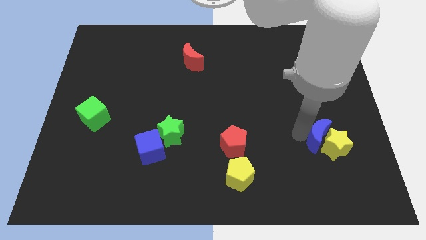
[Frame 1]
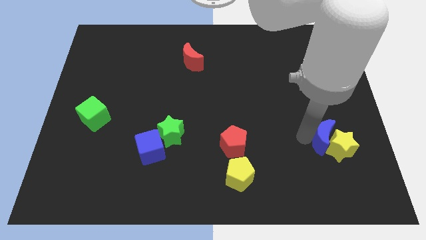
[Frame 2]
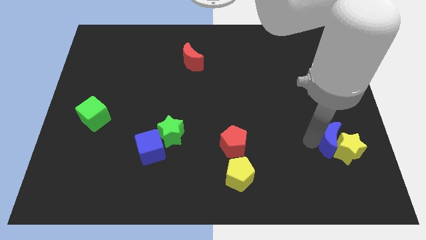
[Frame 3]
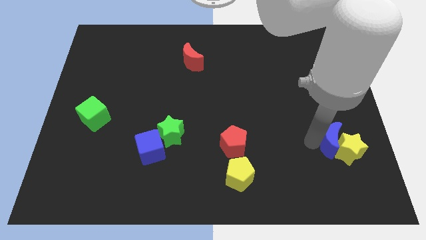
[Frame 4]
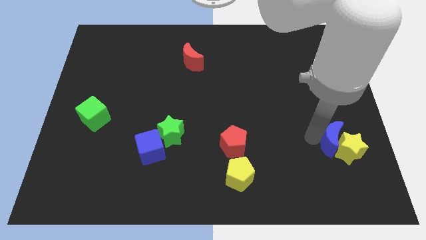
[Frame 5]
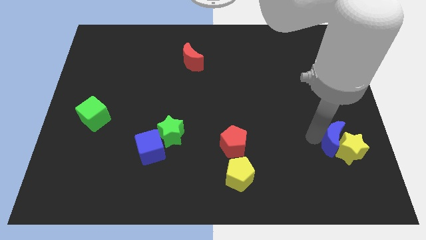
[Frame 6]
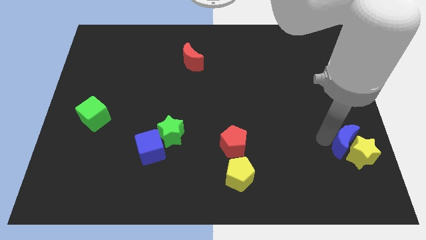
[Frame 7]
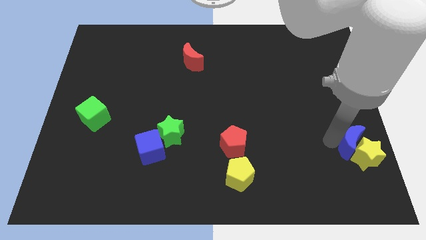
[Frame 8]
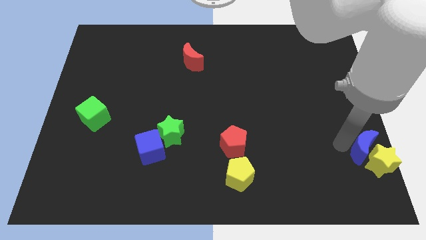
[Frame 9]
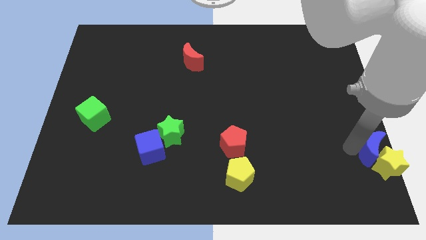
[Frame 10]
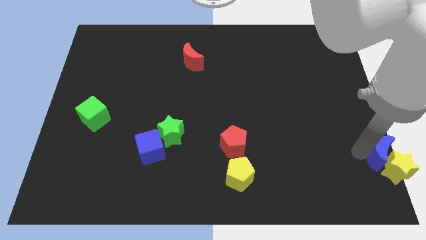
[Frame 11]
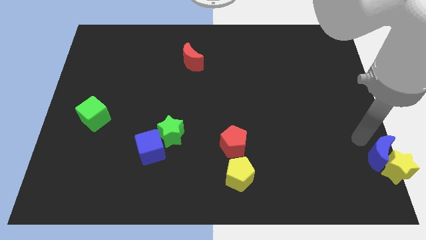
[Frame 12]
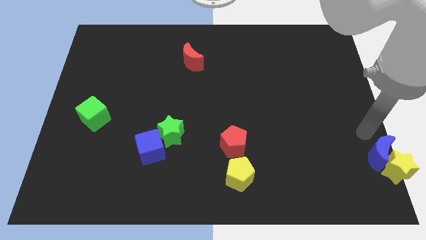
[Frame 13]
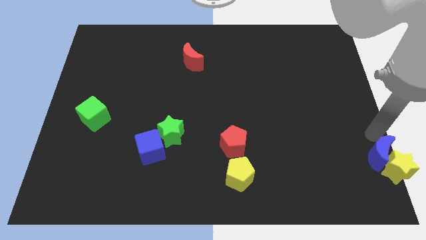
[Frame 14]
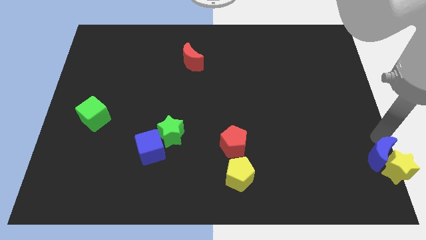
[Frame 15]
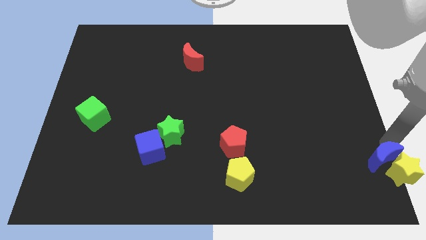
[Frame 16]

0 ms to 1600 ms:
move the blue crescent along with yellow star to the bottom right on the board

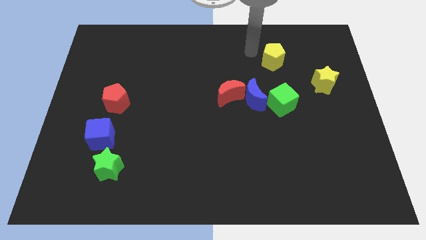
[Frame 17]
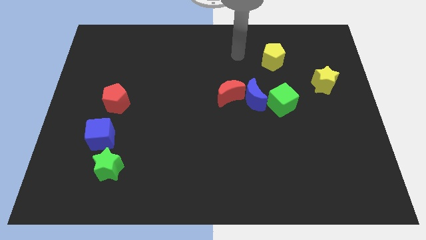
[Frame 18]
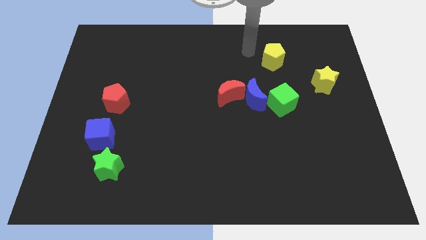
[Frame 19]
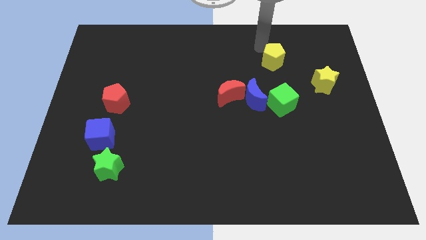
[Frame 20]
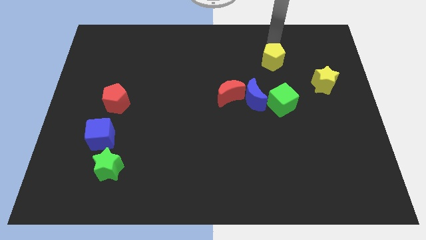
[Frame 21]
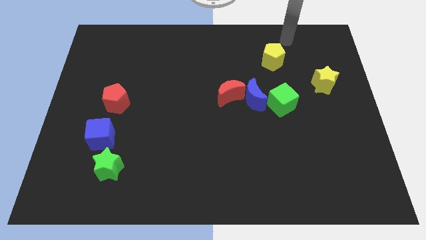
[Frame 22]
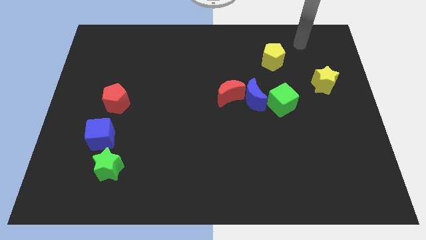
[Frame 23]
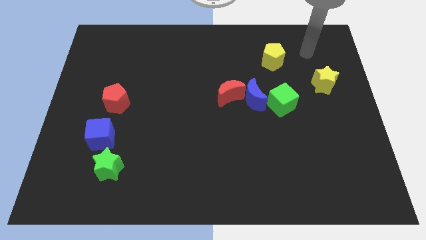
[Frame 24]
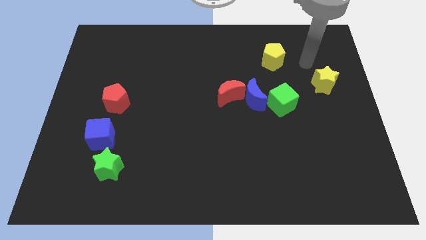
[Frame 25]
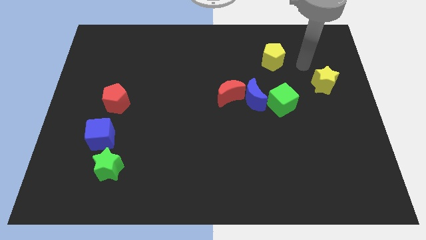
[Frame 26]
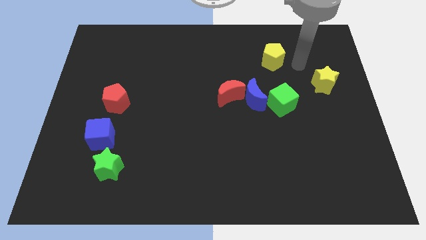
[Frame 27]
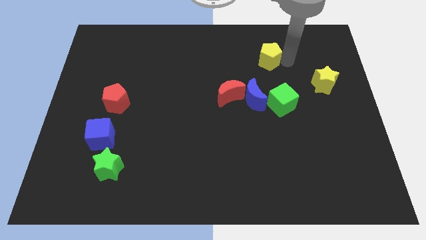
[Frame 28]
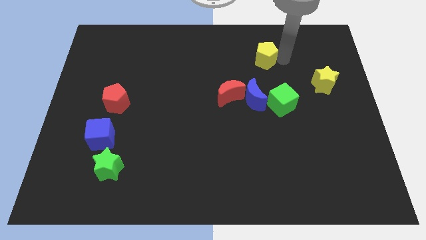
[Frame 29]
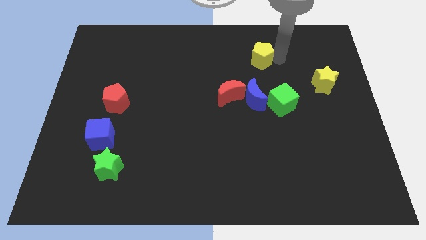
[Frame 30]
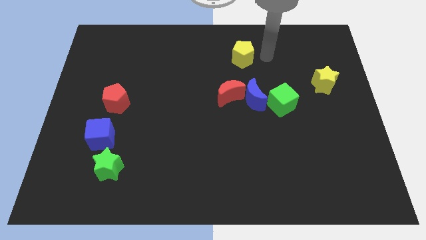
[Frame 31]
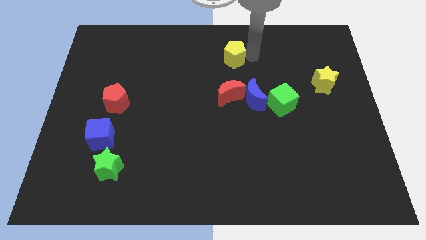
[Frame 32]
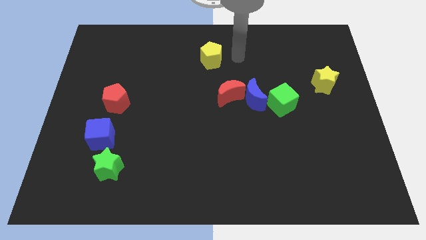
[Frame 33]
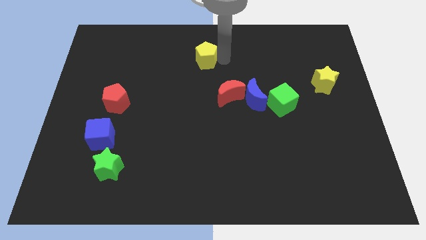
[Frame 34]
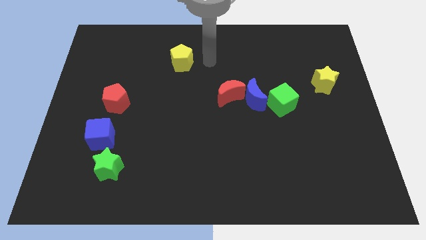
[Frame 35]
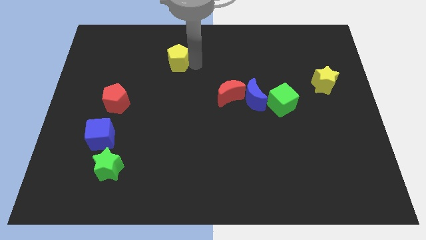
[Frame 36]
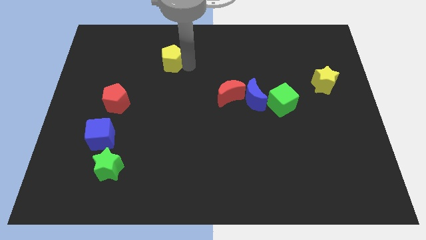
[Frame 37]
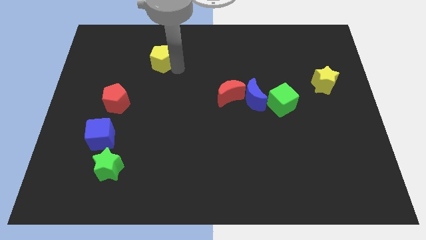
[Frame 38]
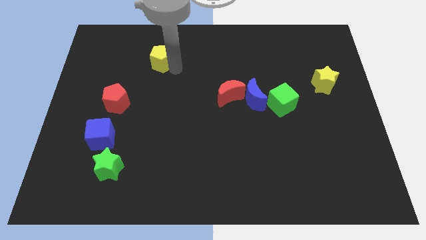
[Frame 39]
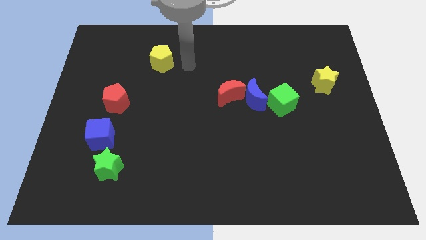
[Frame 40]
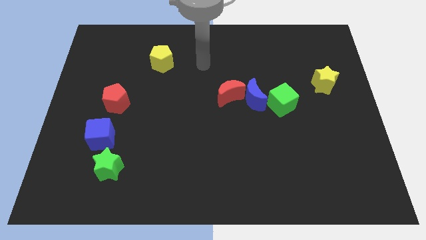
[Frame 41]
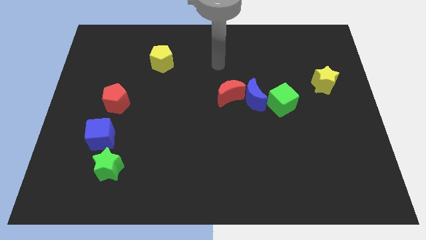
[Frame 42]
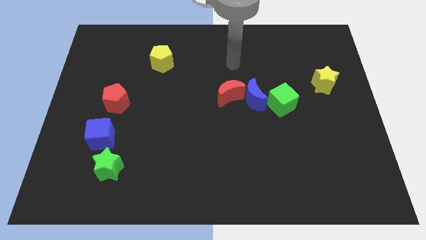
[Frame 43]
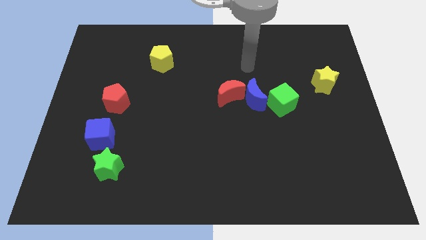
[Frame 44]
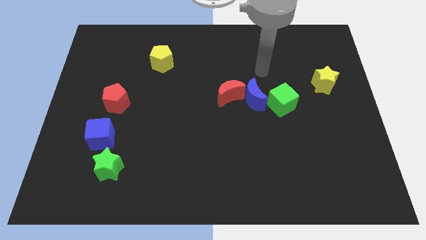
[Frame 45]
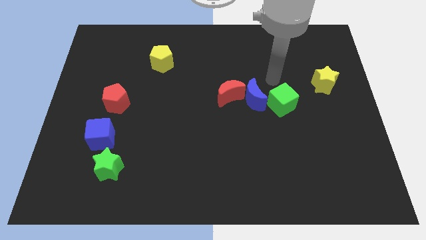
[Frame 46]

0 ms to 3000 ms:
move the yellow pentagon to the left side of the board

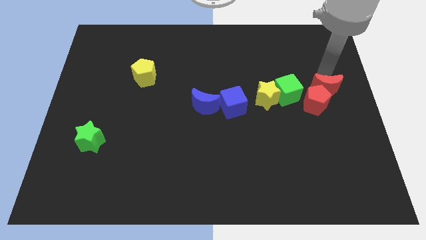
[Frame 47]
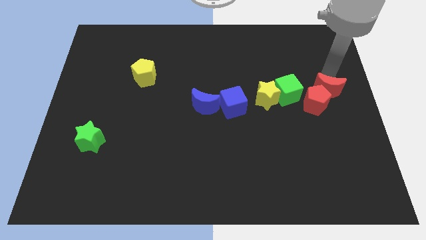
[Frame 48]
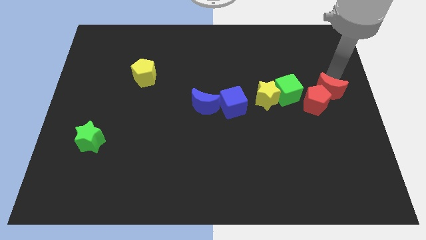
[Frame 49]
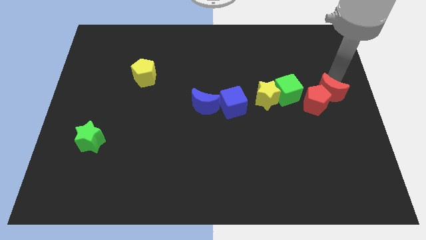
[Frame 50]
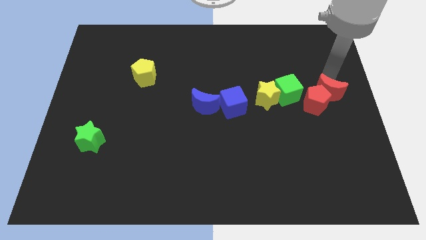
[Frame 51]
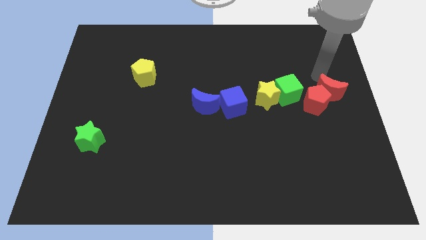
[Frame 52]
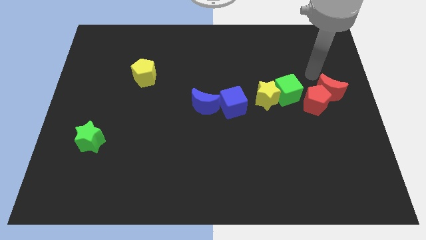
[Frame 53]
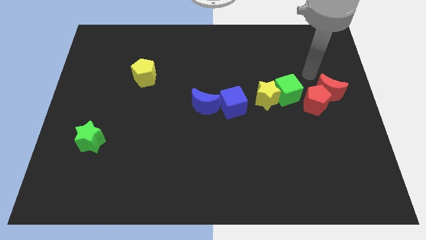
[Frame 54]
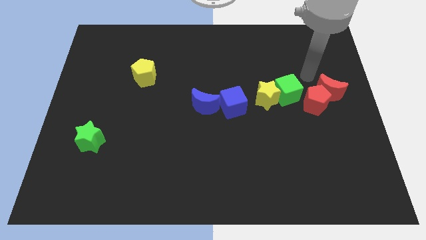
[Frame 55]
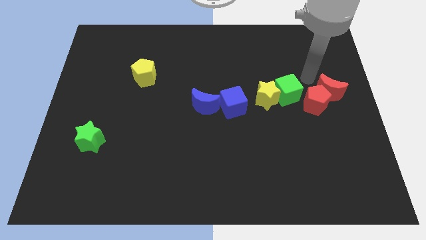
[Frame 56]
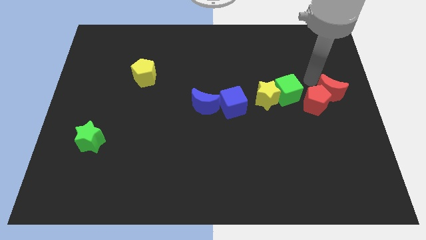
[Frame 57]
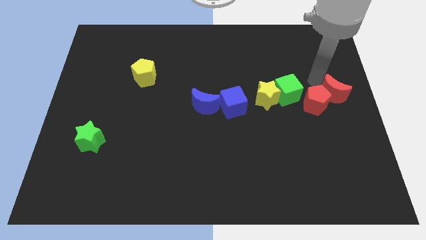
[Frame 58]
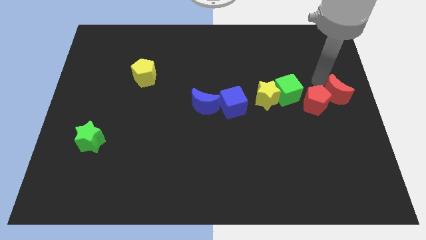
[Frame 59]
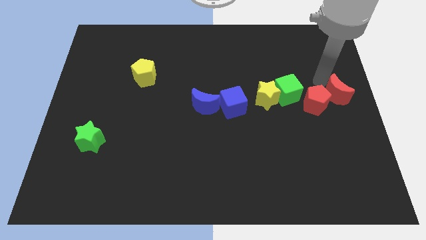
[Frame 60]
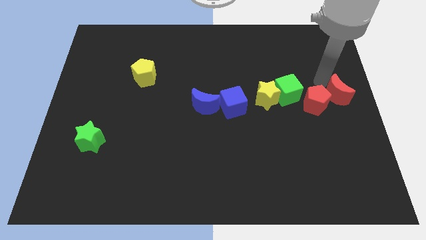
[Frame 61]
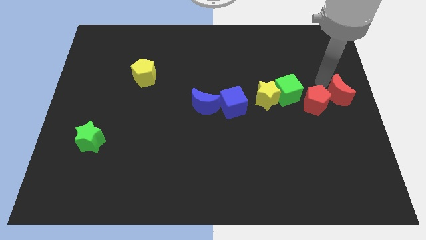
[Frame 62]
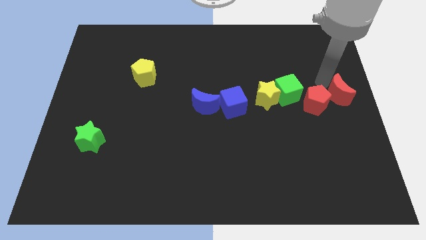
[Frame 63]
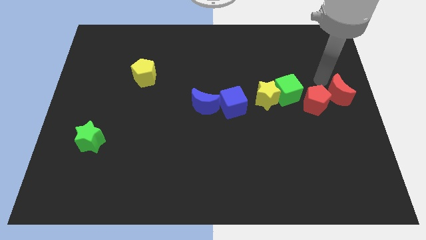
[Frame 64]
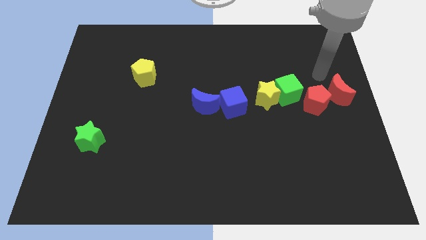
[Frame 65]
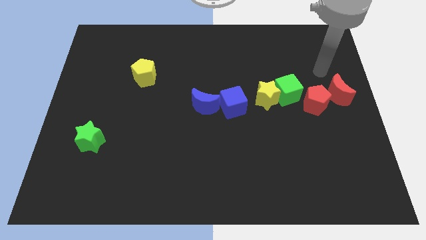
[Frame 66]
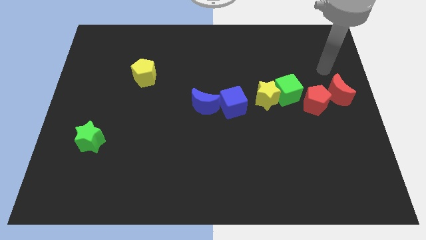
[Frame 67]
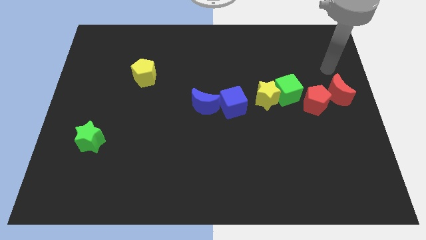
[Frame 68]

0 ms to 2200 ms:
move red crescent to the right of red pentagon

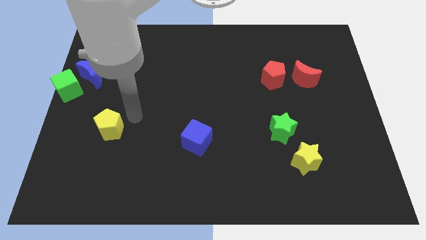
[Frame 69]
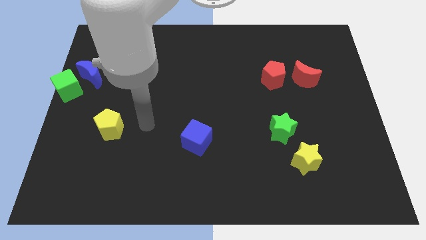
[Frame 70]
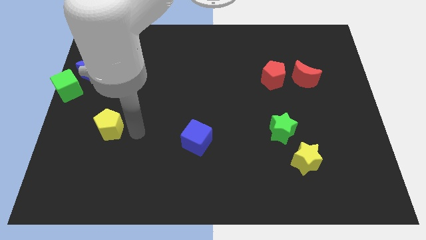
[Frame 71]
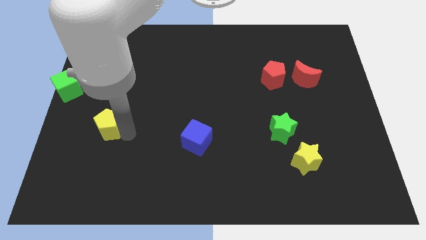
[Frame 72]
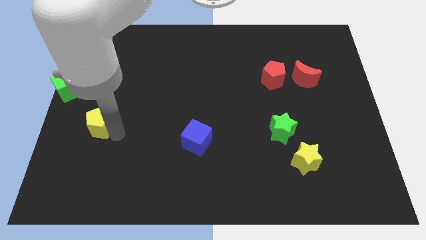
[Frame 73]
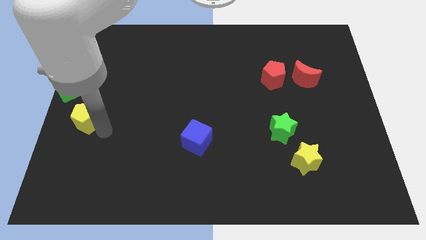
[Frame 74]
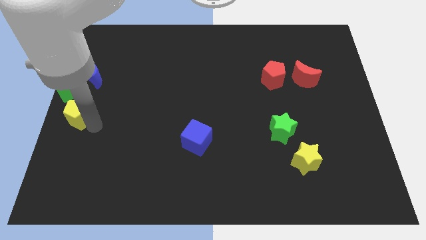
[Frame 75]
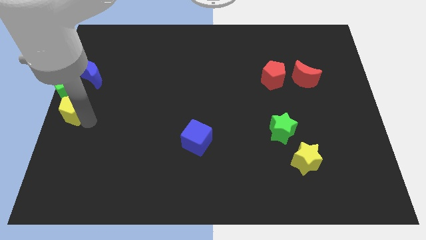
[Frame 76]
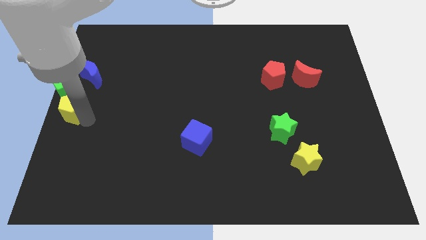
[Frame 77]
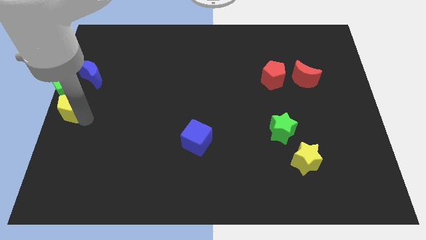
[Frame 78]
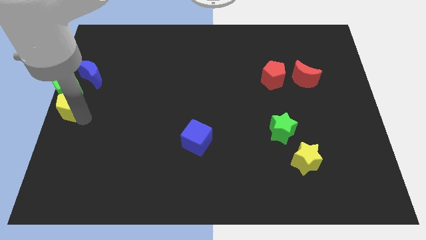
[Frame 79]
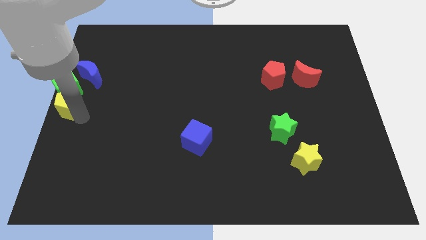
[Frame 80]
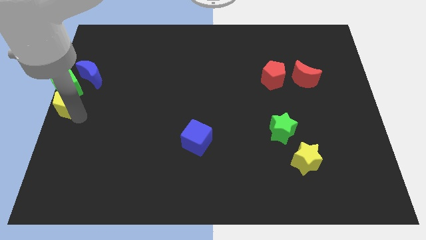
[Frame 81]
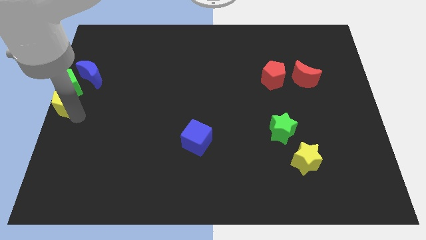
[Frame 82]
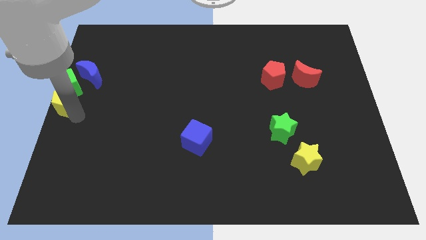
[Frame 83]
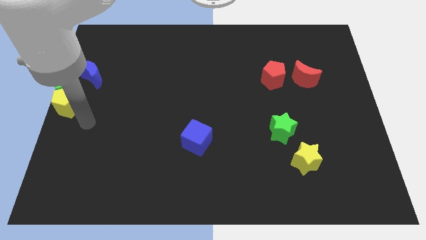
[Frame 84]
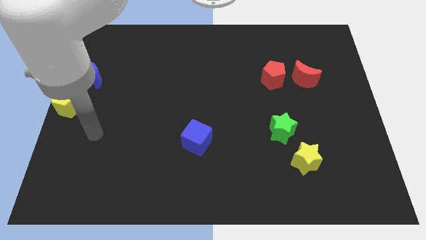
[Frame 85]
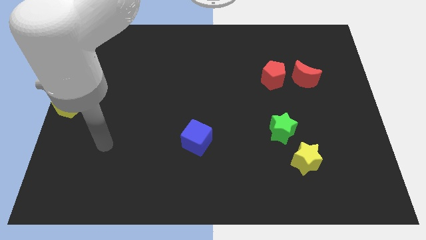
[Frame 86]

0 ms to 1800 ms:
place the yellow pentagon below the green cube

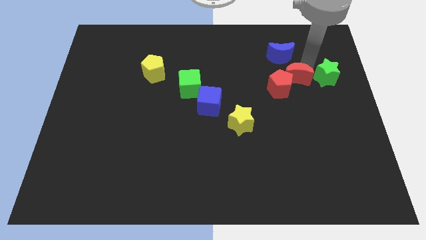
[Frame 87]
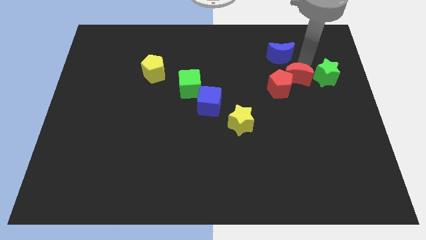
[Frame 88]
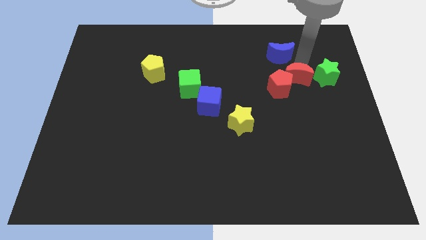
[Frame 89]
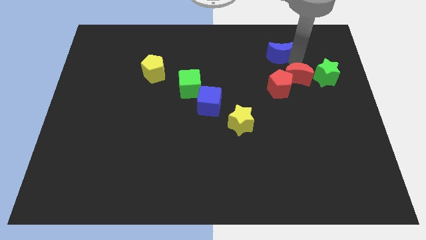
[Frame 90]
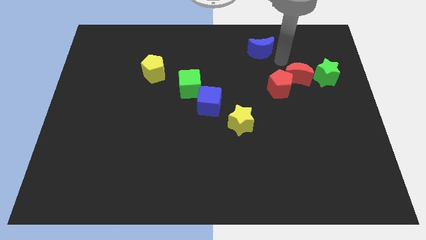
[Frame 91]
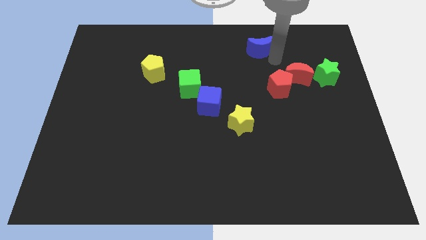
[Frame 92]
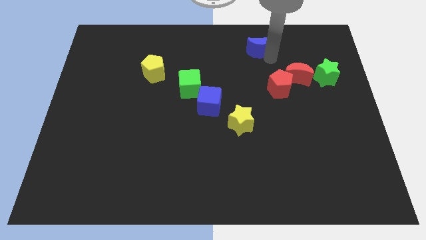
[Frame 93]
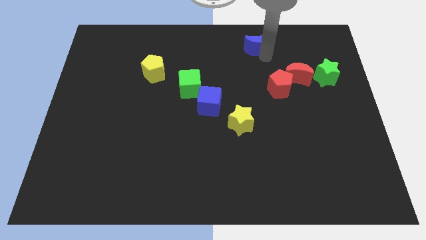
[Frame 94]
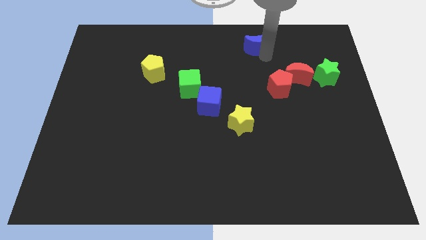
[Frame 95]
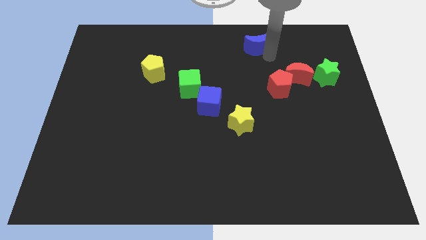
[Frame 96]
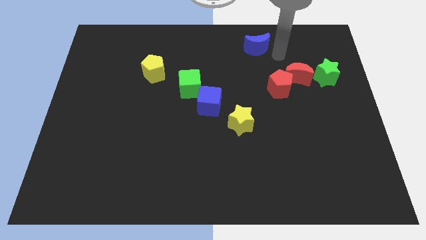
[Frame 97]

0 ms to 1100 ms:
push the blue moon towards the top side of the board
